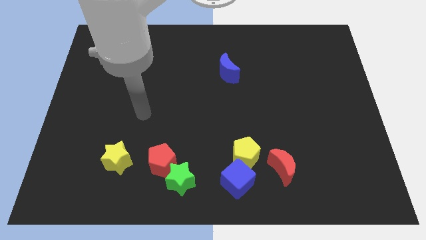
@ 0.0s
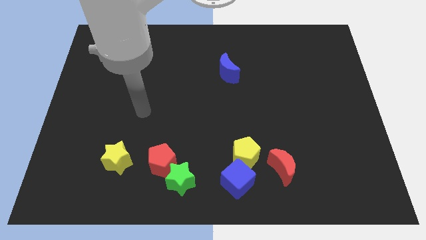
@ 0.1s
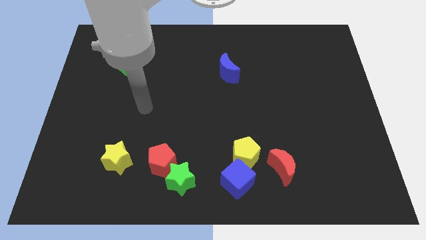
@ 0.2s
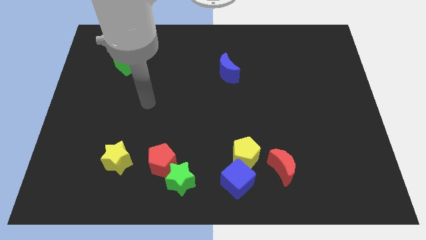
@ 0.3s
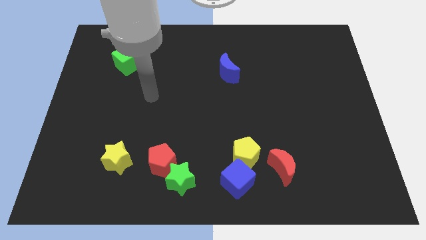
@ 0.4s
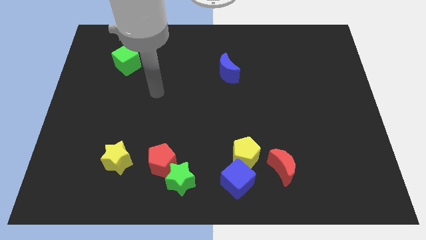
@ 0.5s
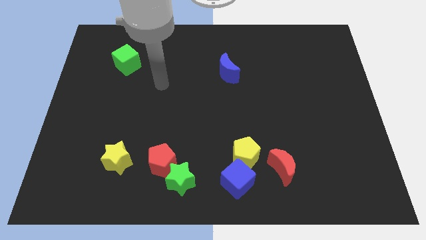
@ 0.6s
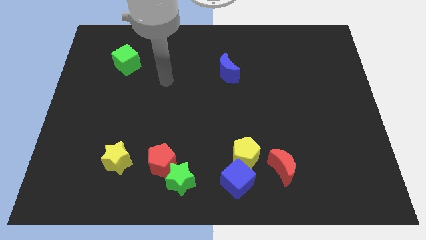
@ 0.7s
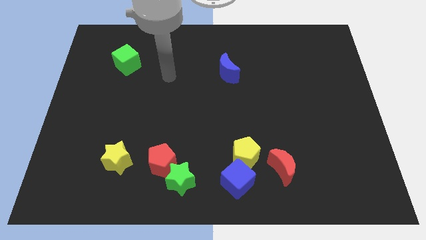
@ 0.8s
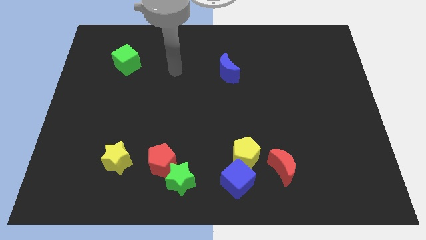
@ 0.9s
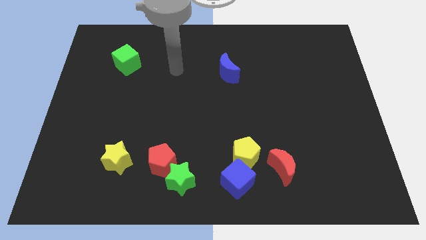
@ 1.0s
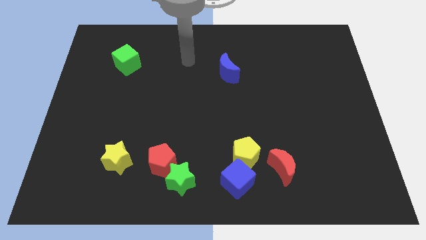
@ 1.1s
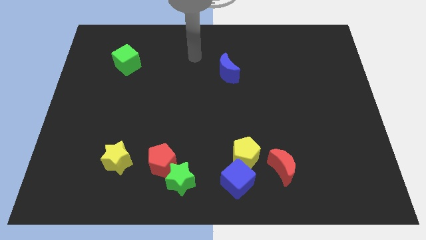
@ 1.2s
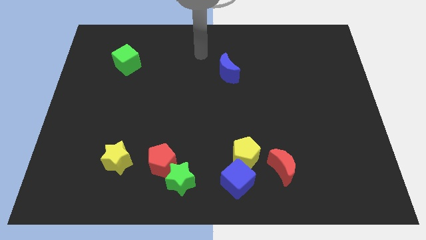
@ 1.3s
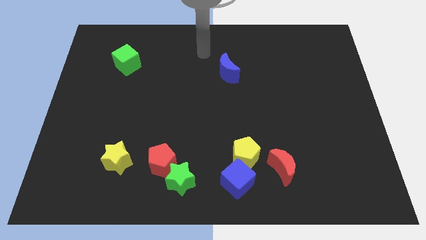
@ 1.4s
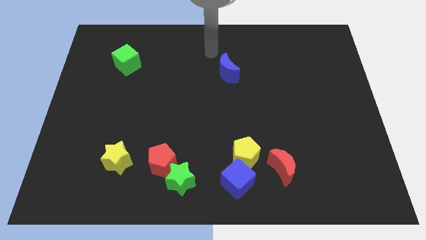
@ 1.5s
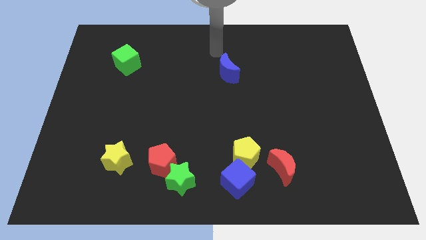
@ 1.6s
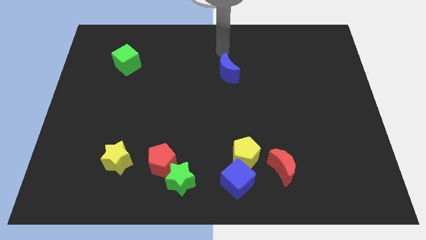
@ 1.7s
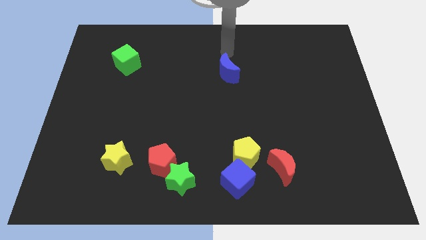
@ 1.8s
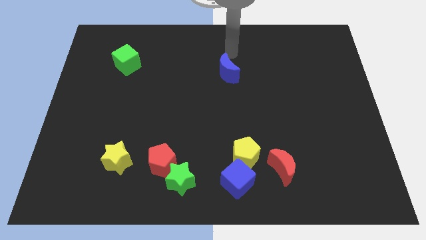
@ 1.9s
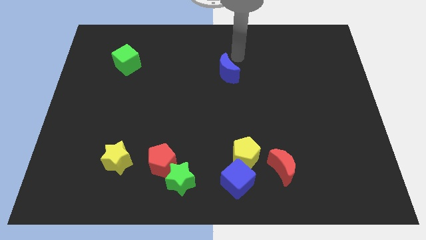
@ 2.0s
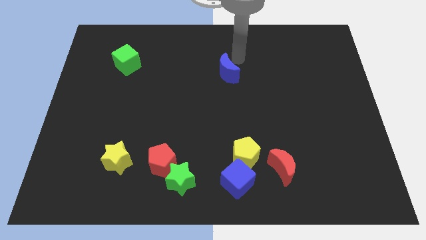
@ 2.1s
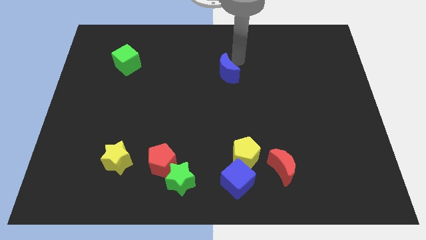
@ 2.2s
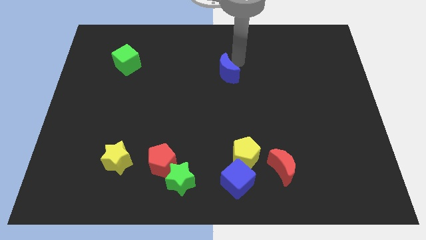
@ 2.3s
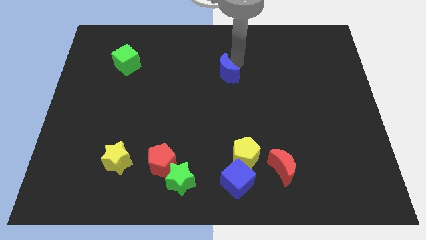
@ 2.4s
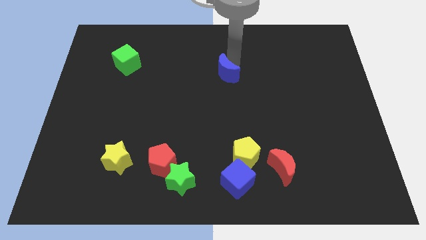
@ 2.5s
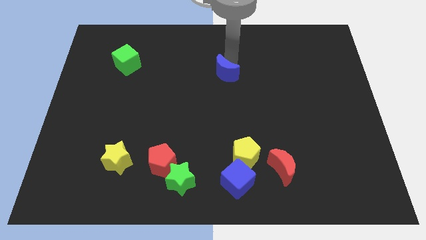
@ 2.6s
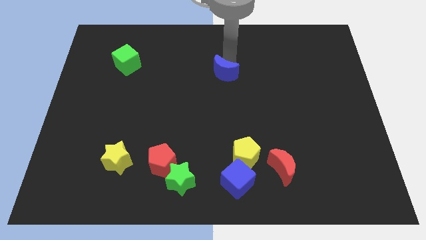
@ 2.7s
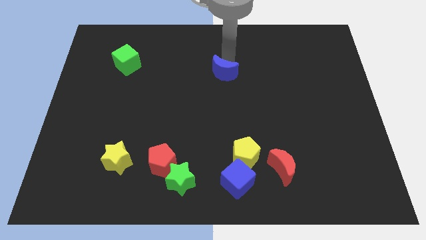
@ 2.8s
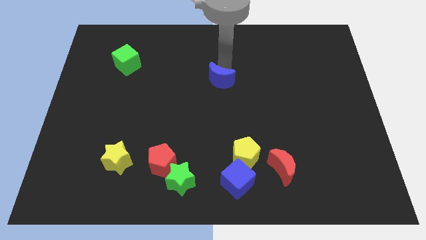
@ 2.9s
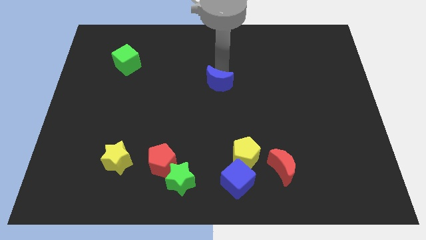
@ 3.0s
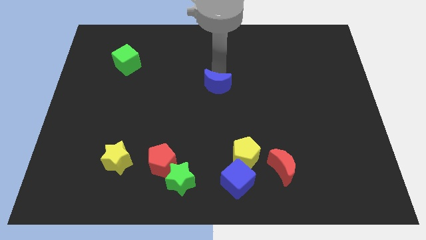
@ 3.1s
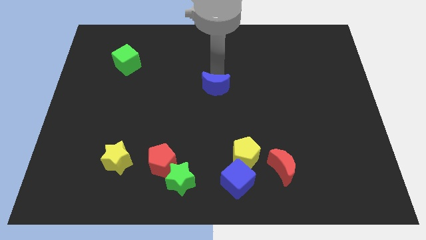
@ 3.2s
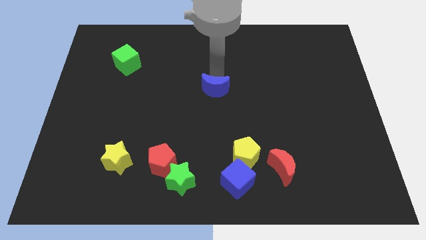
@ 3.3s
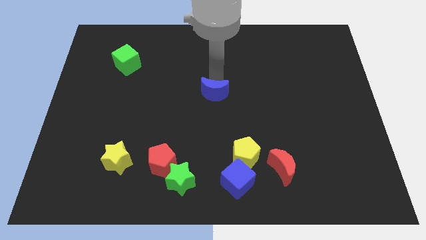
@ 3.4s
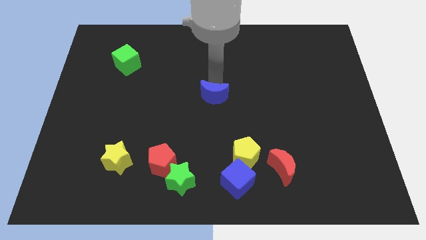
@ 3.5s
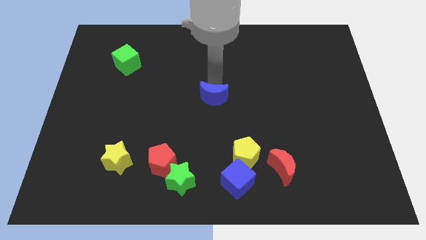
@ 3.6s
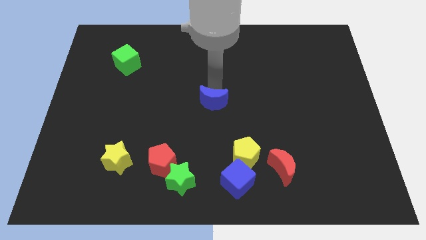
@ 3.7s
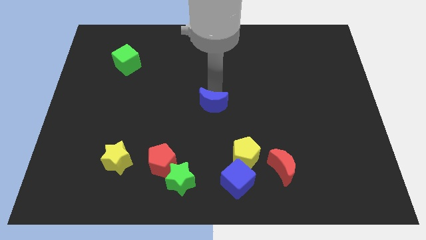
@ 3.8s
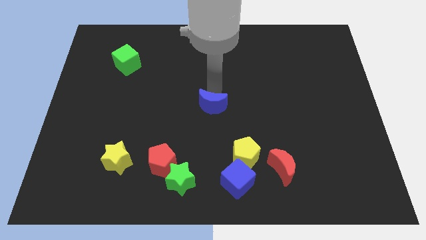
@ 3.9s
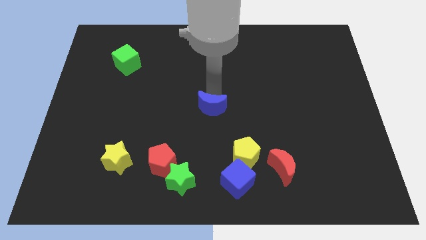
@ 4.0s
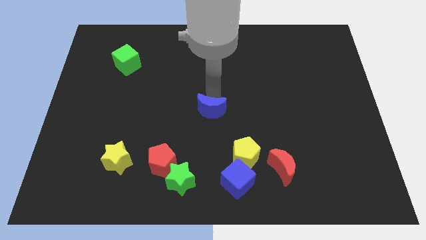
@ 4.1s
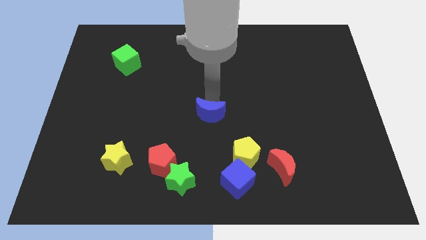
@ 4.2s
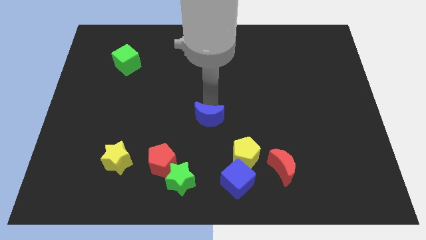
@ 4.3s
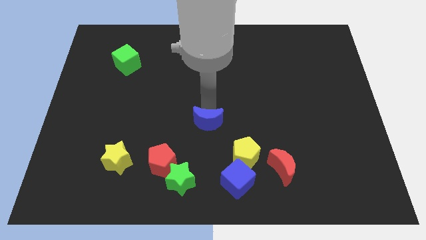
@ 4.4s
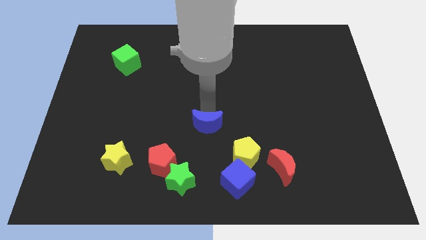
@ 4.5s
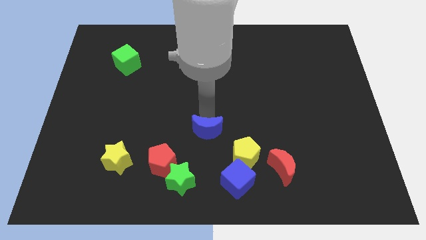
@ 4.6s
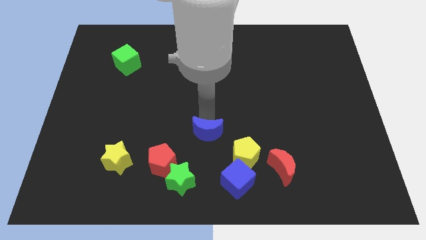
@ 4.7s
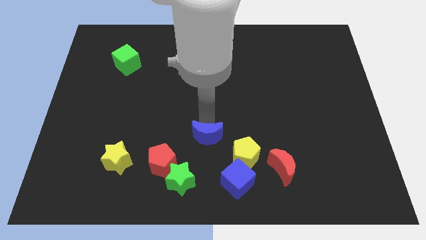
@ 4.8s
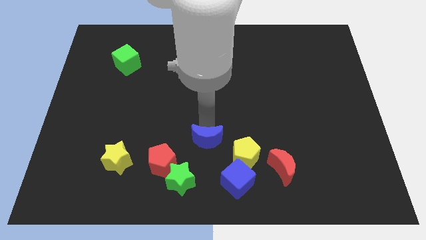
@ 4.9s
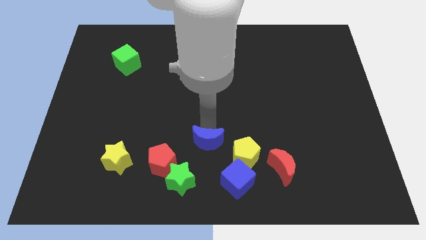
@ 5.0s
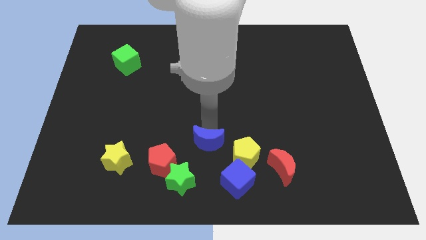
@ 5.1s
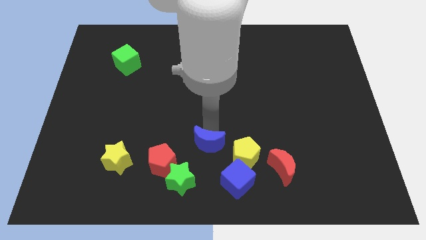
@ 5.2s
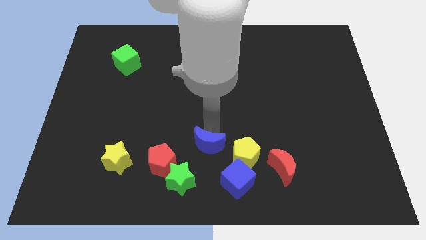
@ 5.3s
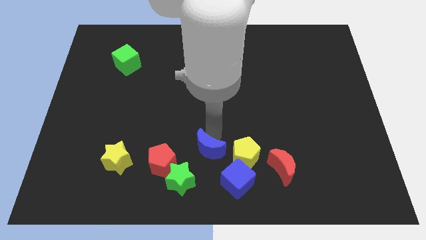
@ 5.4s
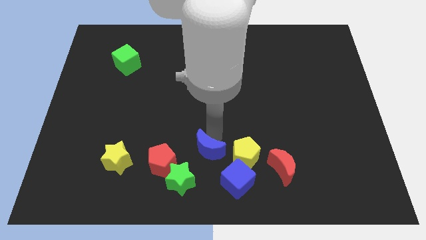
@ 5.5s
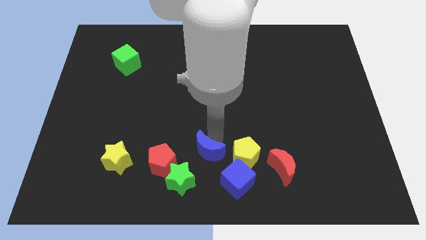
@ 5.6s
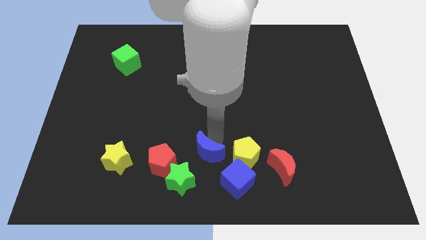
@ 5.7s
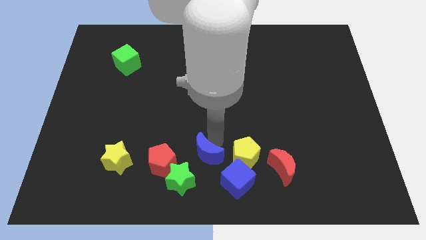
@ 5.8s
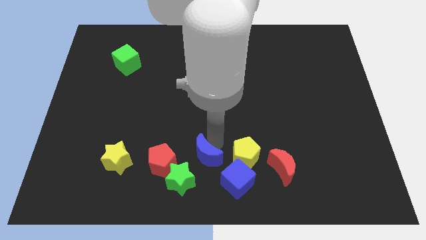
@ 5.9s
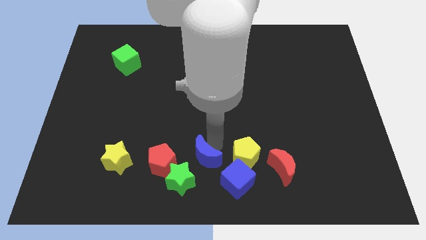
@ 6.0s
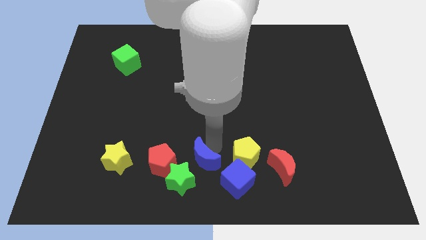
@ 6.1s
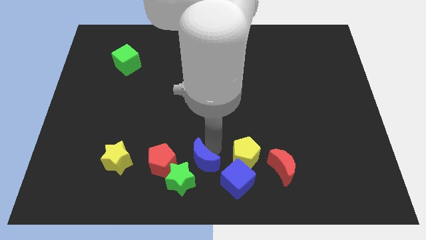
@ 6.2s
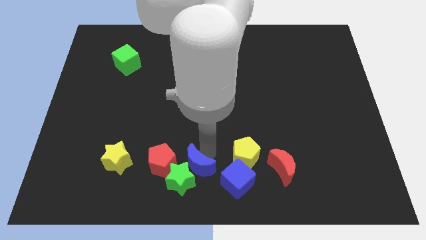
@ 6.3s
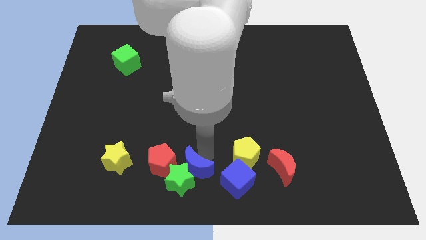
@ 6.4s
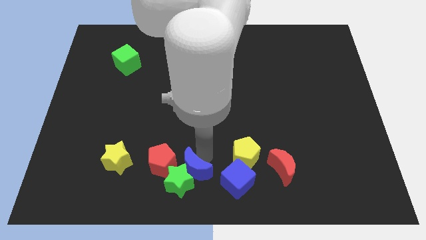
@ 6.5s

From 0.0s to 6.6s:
slide the blue moon towards the green star

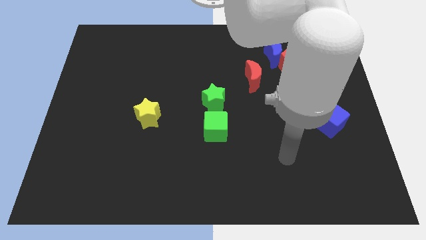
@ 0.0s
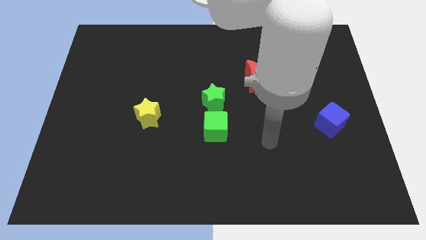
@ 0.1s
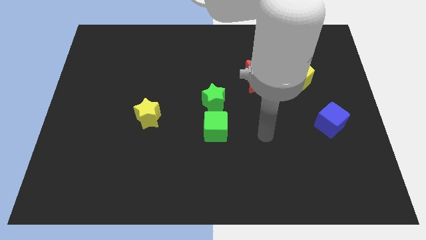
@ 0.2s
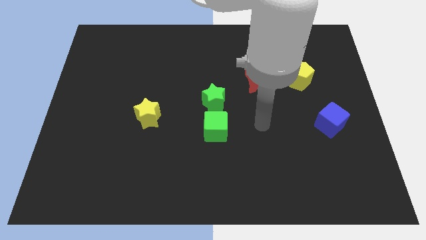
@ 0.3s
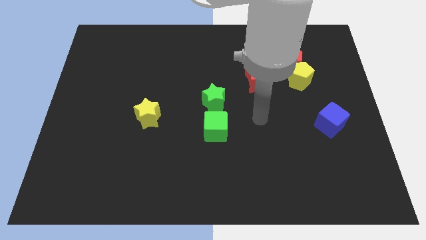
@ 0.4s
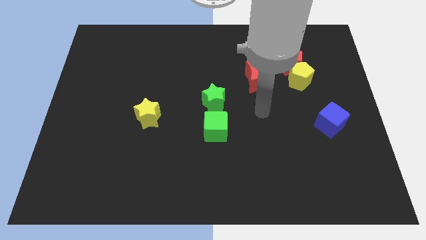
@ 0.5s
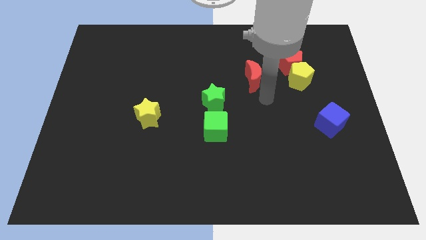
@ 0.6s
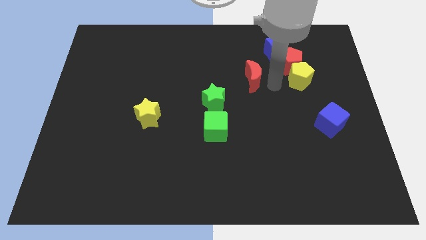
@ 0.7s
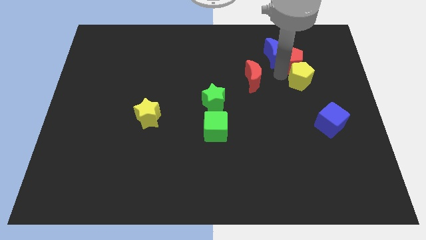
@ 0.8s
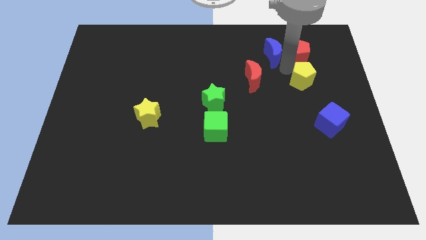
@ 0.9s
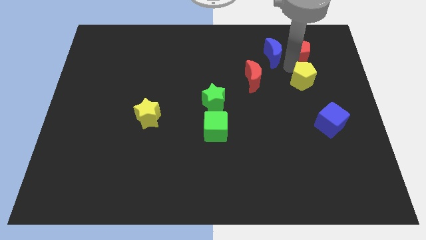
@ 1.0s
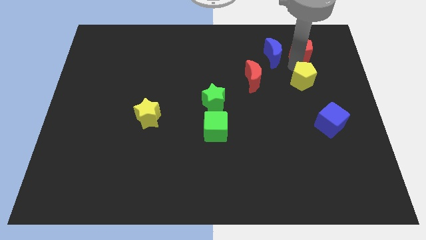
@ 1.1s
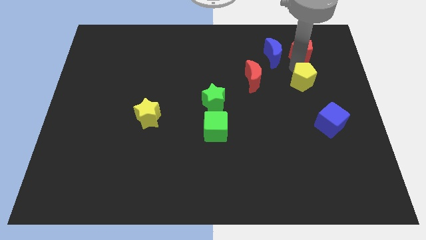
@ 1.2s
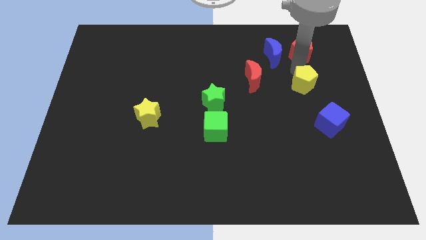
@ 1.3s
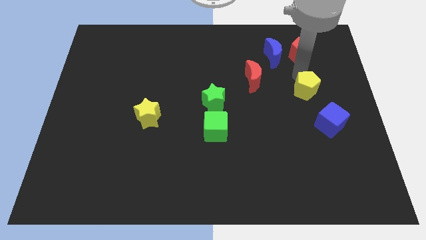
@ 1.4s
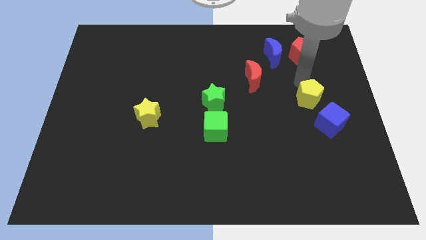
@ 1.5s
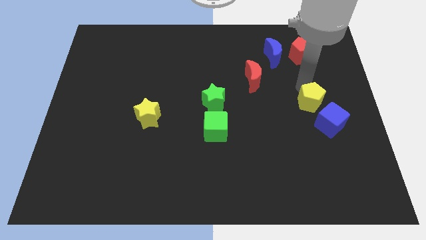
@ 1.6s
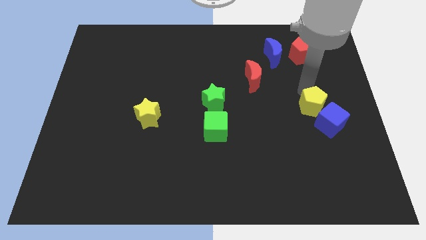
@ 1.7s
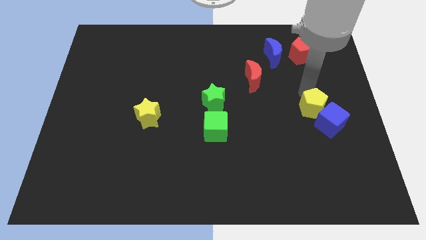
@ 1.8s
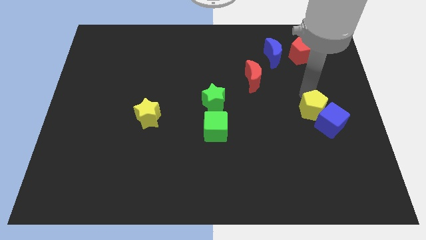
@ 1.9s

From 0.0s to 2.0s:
move the yellow pentagon towards the blue cube
